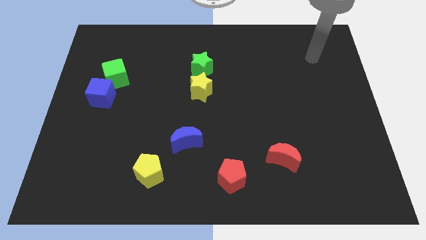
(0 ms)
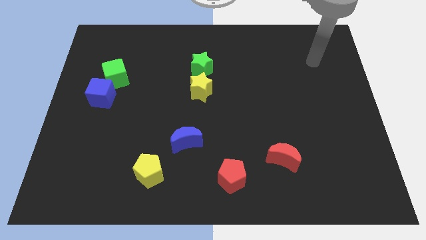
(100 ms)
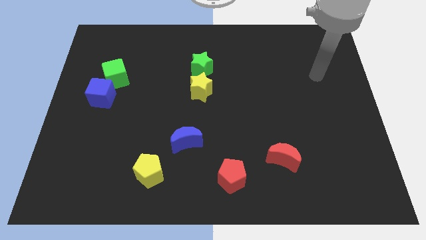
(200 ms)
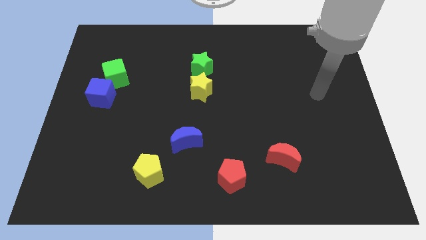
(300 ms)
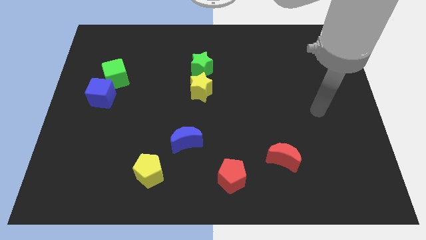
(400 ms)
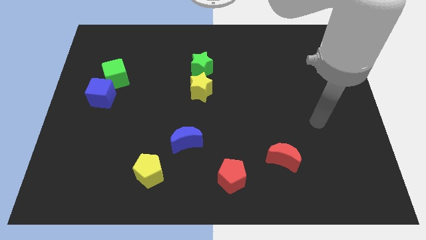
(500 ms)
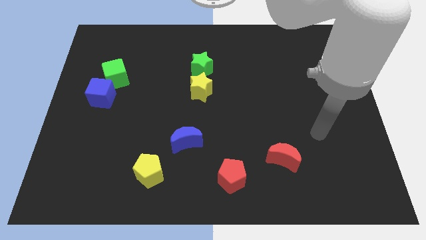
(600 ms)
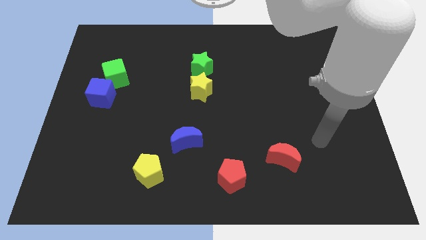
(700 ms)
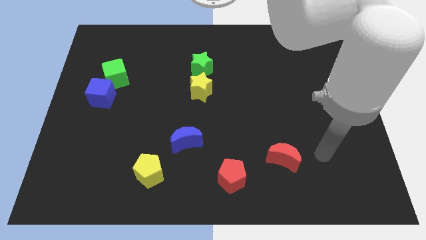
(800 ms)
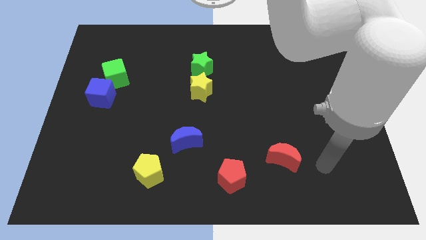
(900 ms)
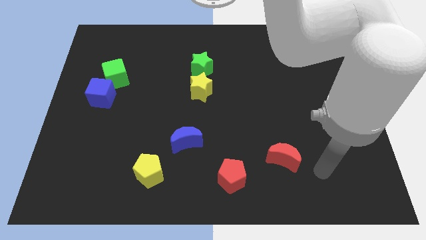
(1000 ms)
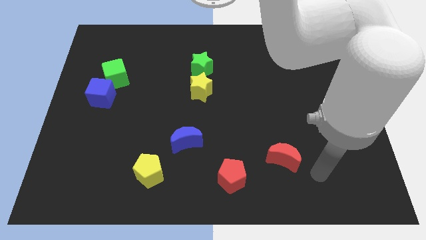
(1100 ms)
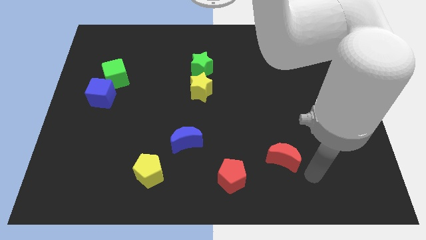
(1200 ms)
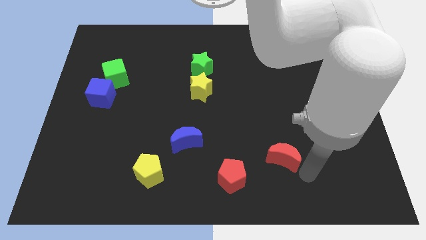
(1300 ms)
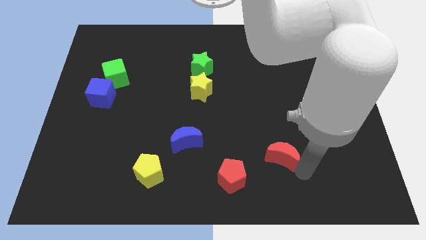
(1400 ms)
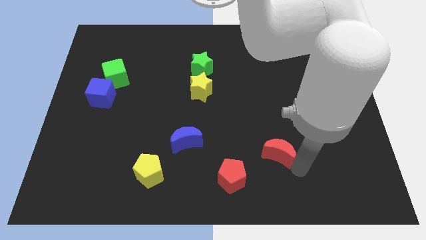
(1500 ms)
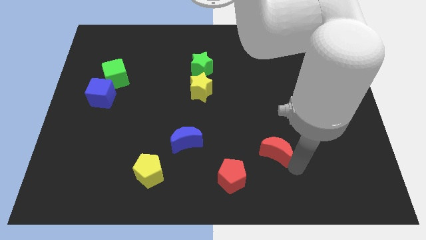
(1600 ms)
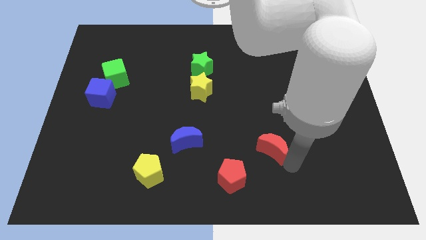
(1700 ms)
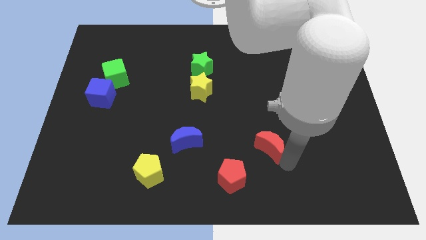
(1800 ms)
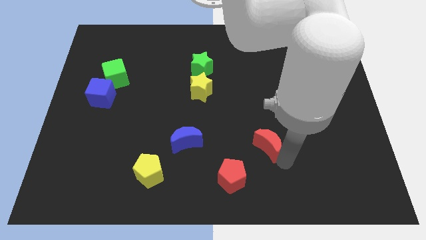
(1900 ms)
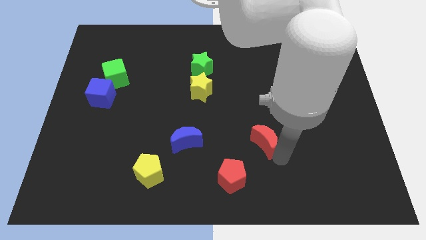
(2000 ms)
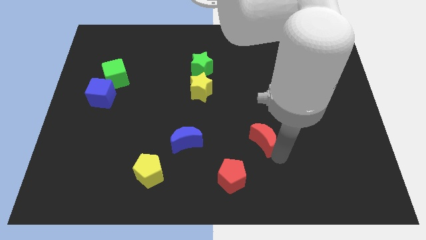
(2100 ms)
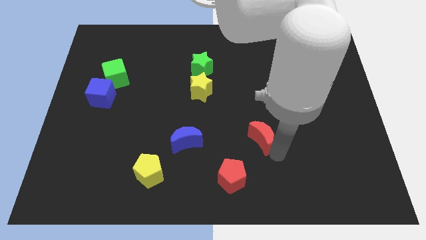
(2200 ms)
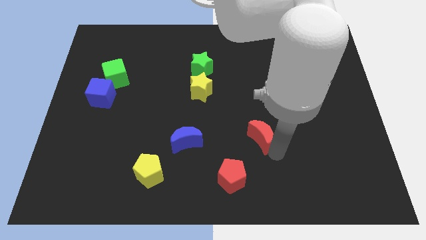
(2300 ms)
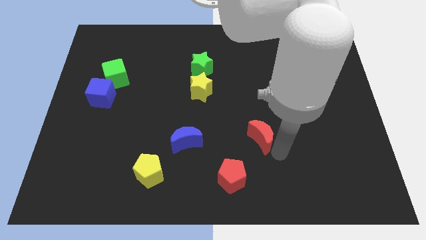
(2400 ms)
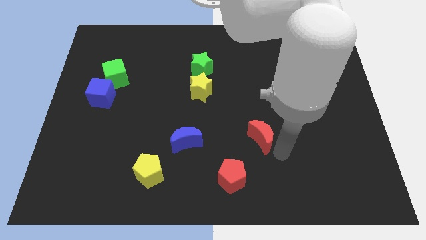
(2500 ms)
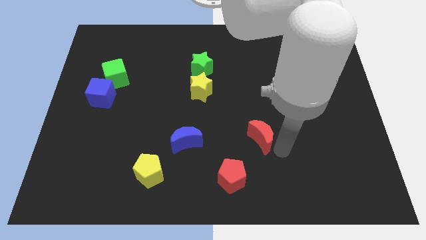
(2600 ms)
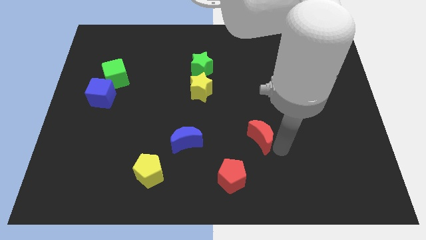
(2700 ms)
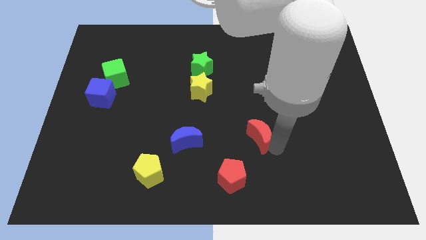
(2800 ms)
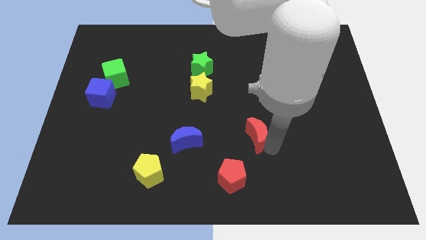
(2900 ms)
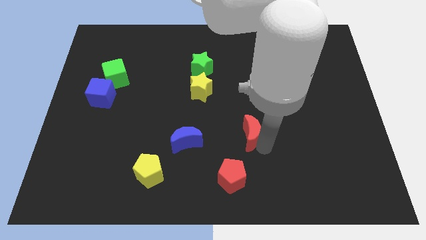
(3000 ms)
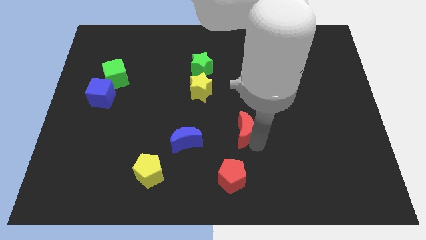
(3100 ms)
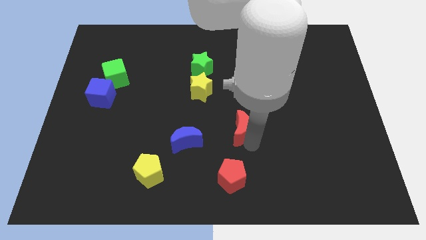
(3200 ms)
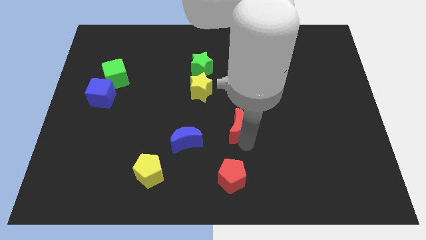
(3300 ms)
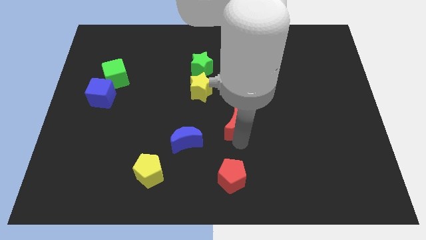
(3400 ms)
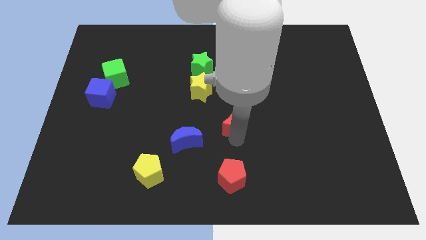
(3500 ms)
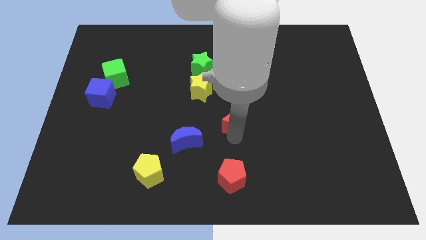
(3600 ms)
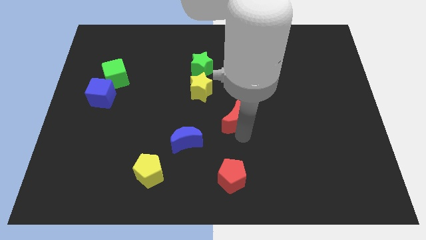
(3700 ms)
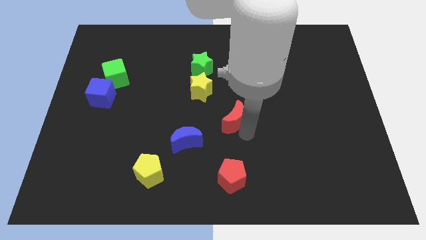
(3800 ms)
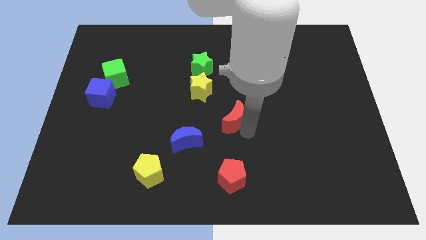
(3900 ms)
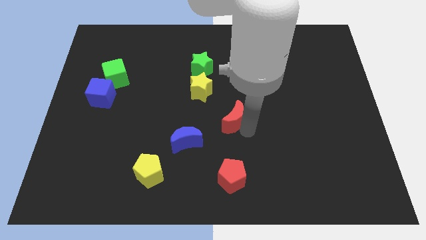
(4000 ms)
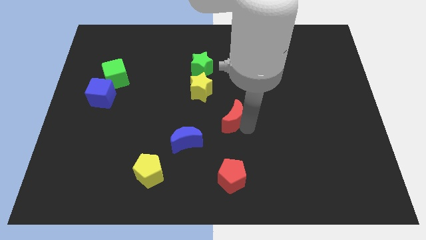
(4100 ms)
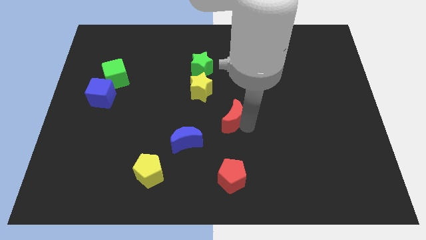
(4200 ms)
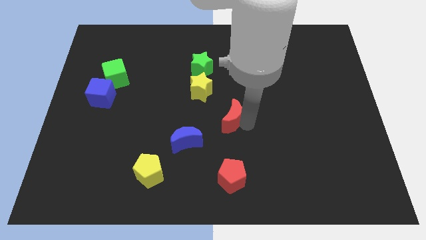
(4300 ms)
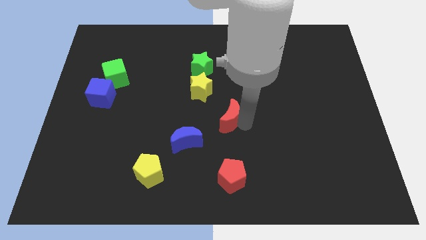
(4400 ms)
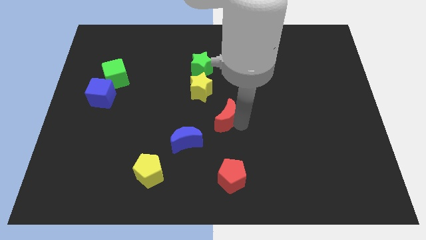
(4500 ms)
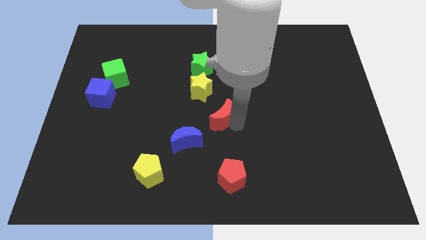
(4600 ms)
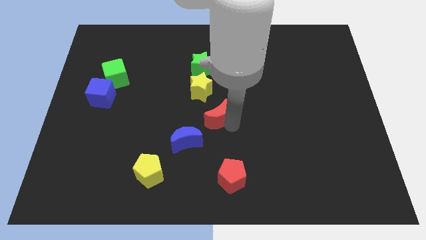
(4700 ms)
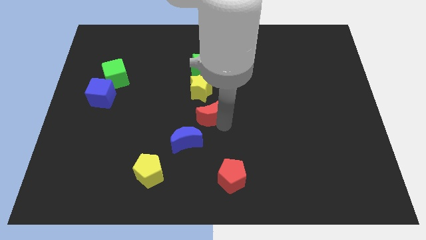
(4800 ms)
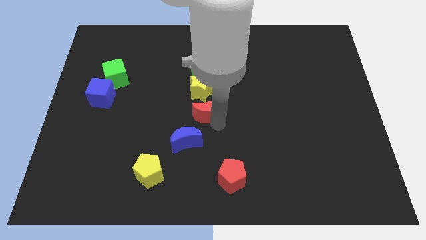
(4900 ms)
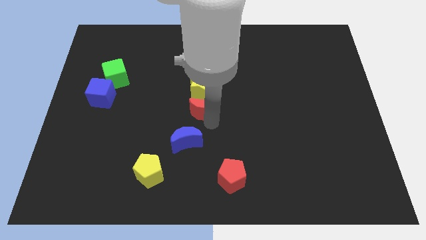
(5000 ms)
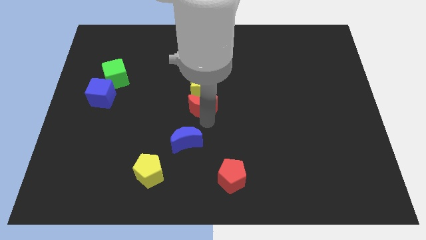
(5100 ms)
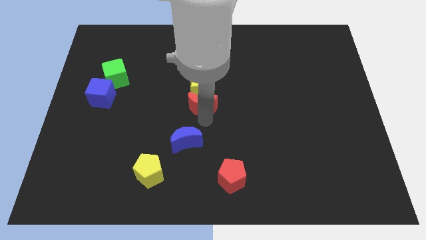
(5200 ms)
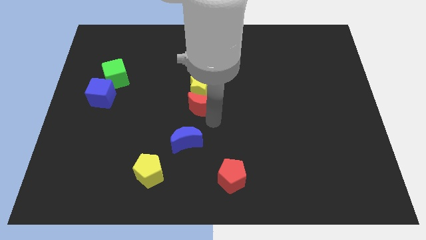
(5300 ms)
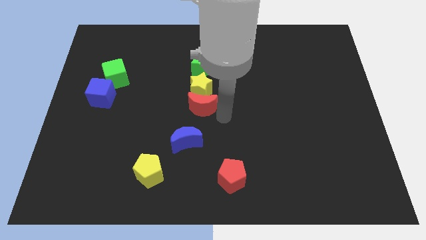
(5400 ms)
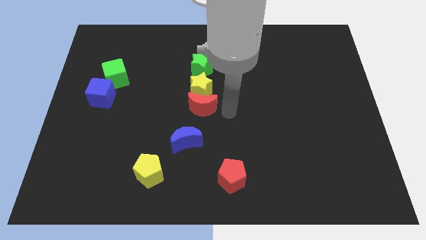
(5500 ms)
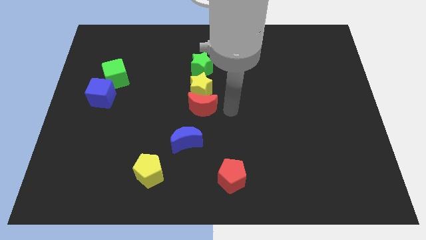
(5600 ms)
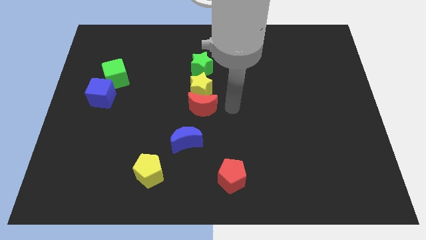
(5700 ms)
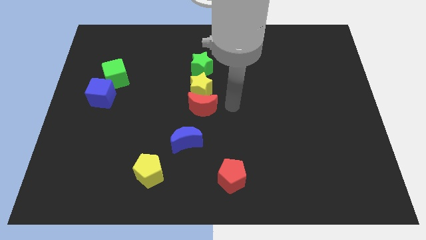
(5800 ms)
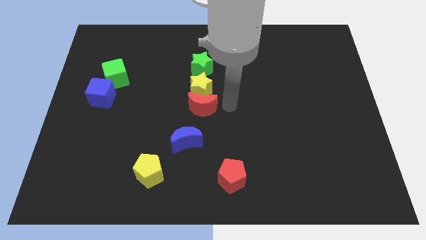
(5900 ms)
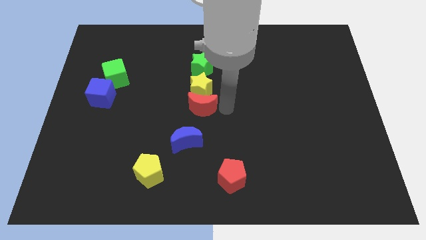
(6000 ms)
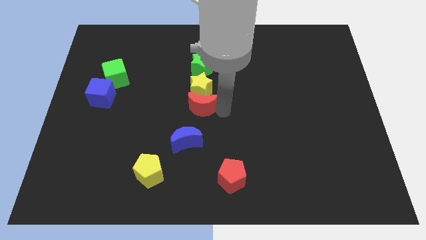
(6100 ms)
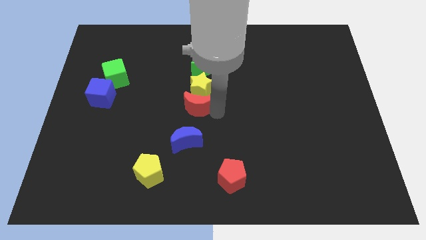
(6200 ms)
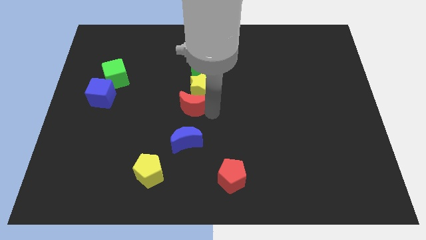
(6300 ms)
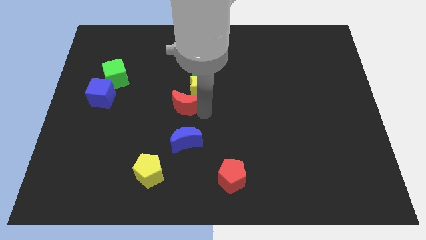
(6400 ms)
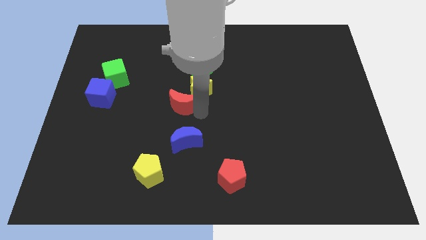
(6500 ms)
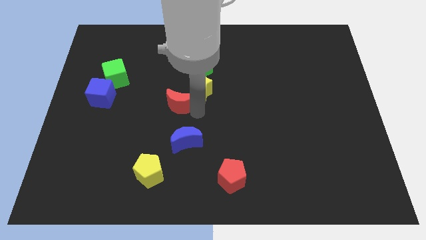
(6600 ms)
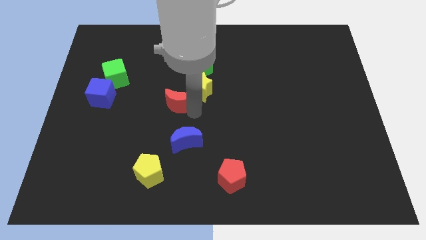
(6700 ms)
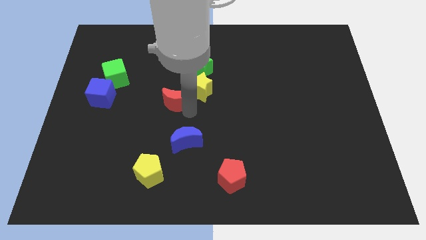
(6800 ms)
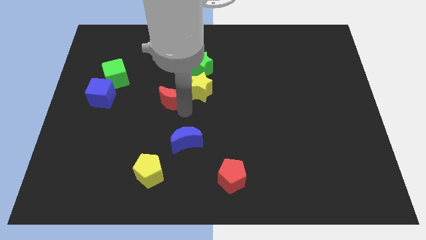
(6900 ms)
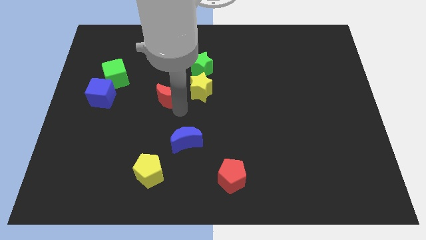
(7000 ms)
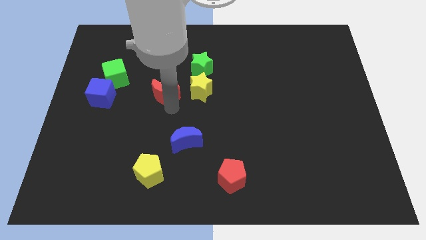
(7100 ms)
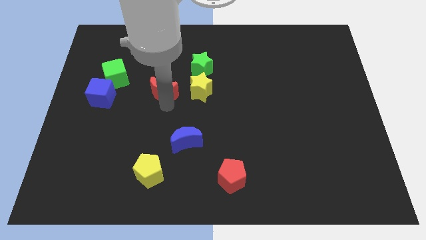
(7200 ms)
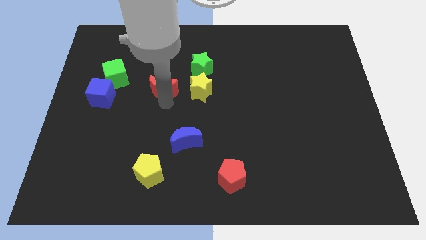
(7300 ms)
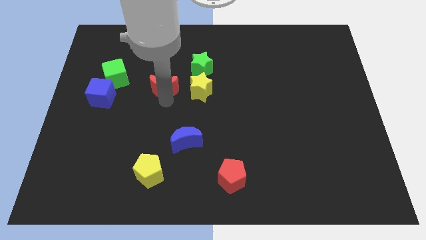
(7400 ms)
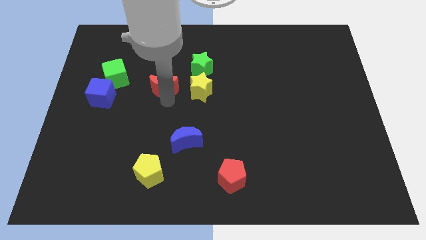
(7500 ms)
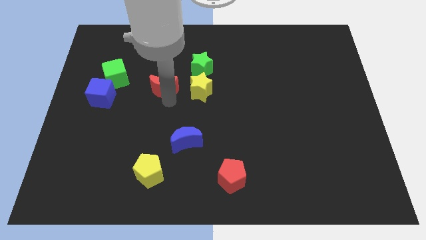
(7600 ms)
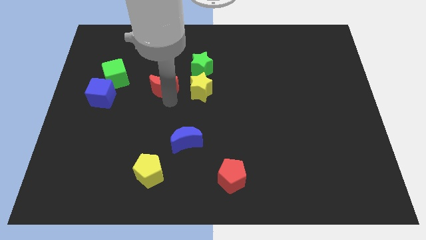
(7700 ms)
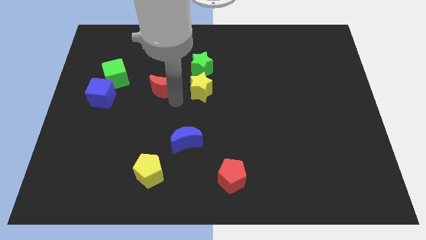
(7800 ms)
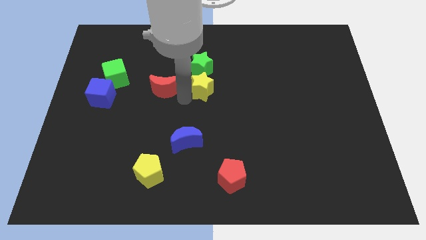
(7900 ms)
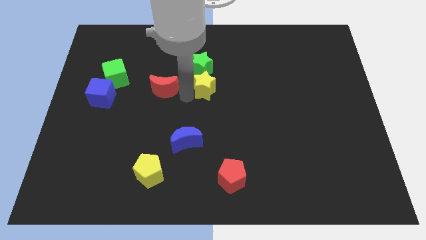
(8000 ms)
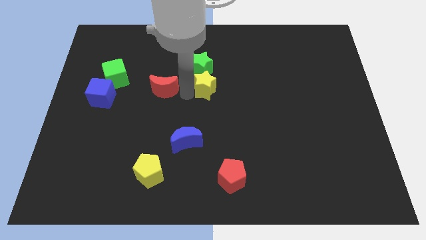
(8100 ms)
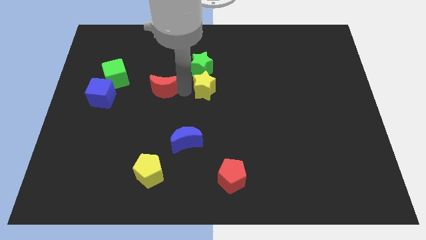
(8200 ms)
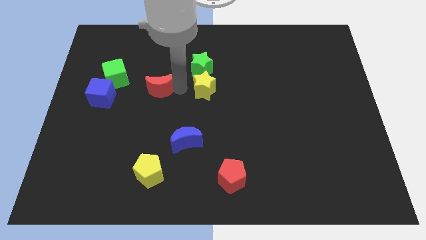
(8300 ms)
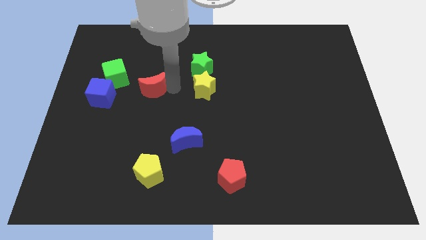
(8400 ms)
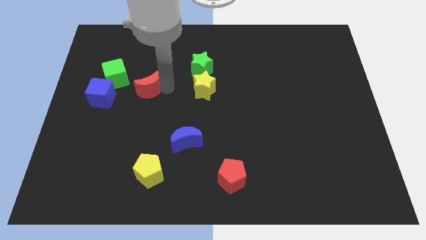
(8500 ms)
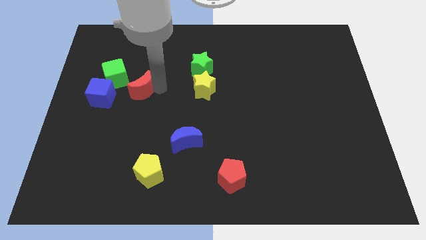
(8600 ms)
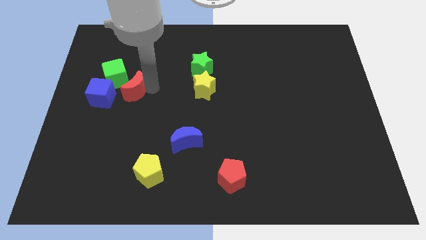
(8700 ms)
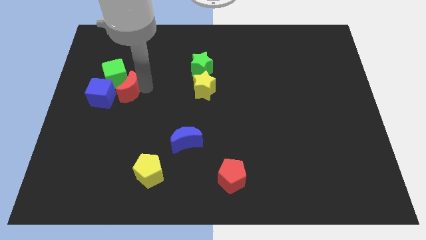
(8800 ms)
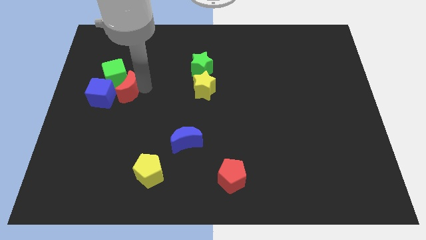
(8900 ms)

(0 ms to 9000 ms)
move the red moon towards the green cube
